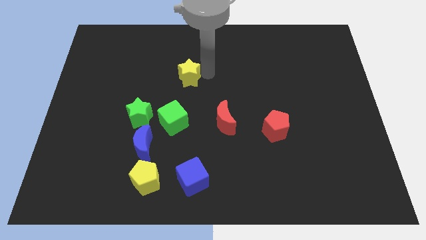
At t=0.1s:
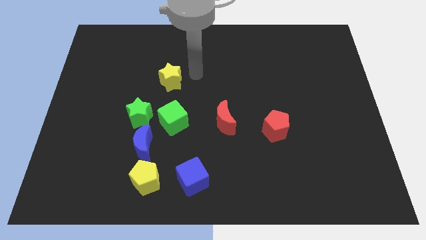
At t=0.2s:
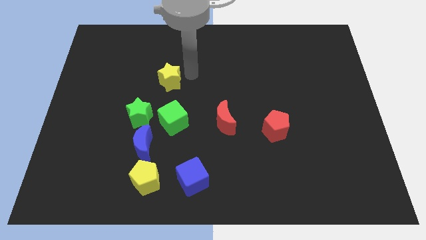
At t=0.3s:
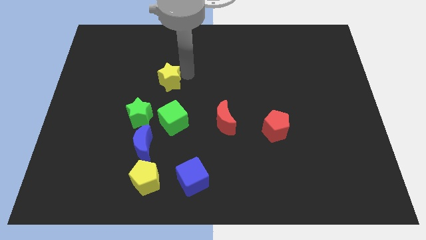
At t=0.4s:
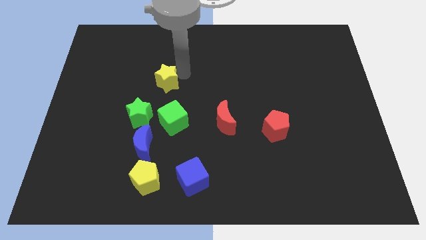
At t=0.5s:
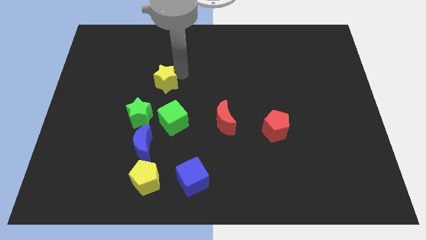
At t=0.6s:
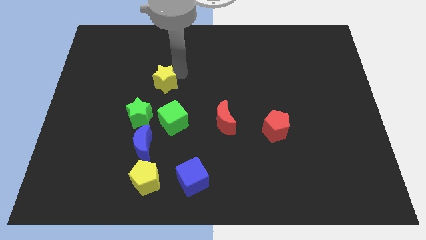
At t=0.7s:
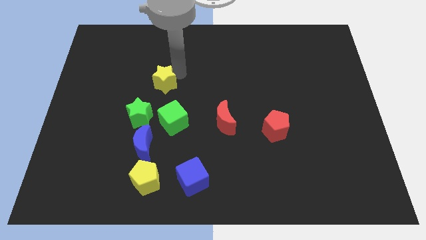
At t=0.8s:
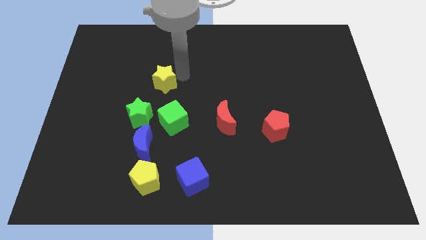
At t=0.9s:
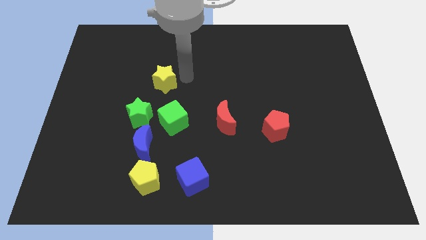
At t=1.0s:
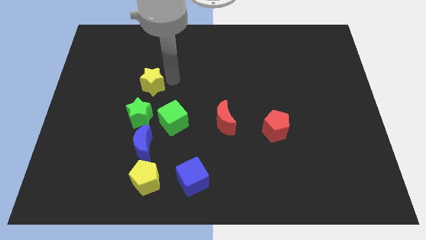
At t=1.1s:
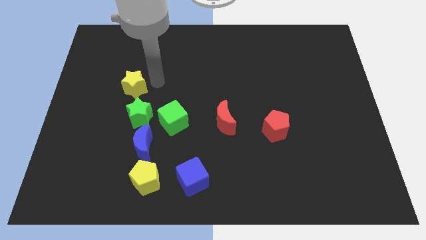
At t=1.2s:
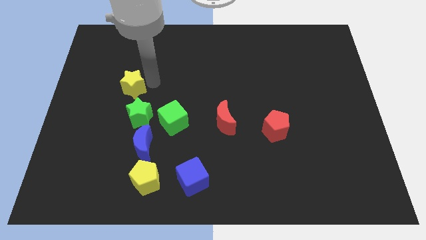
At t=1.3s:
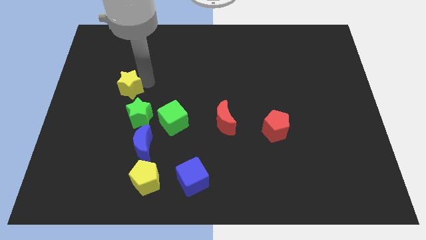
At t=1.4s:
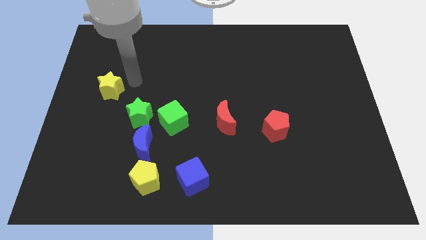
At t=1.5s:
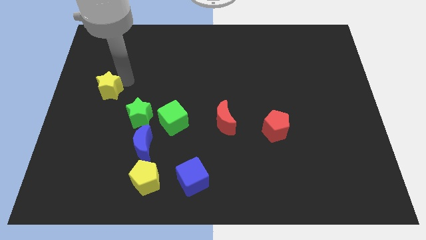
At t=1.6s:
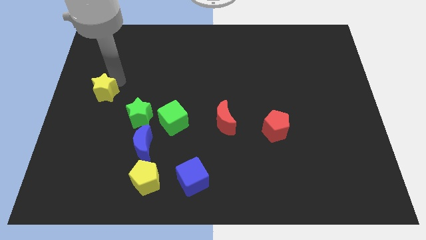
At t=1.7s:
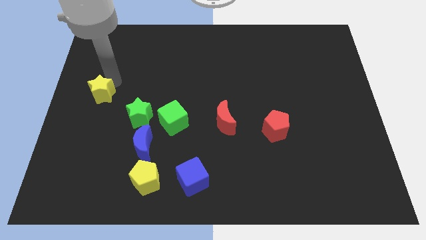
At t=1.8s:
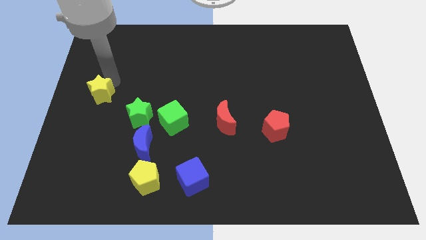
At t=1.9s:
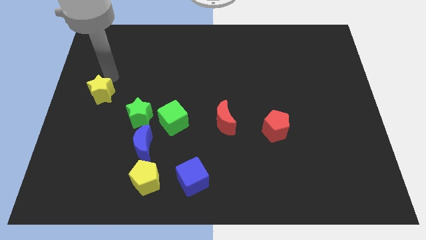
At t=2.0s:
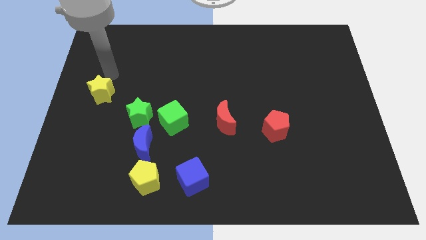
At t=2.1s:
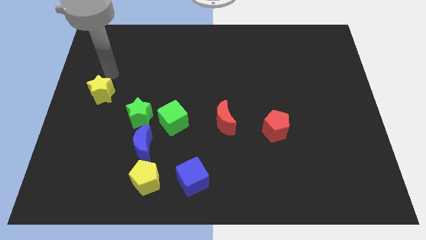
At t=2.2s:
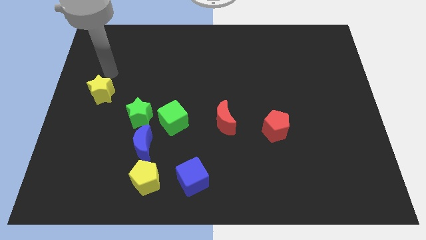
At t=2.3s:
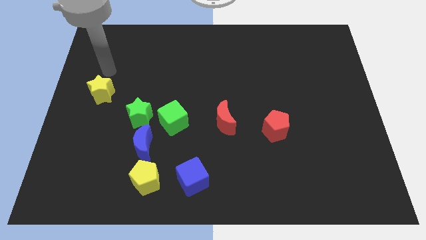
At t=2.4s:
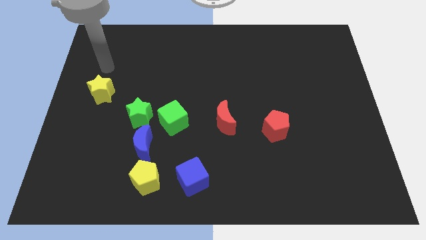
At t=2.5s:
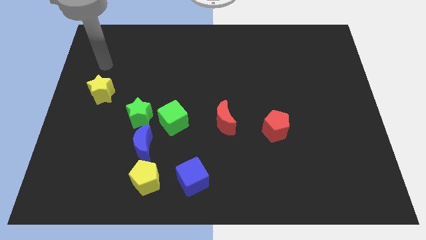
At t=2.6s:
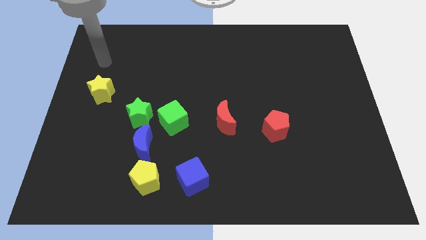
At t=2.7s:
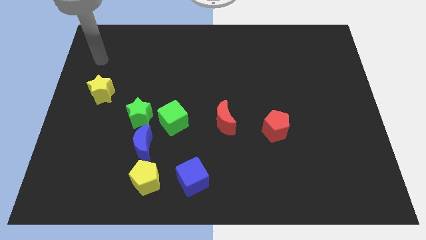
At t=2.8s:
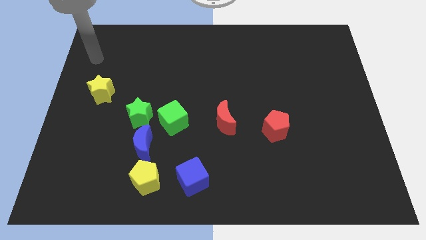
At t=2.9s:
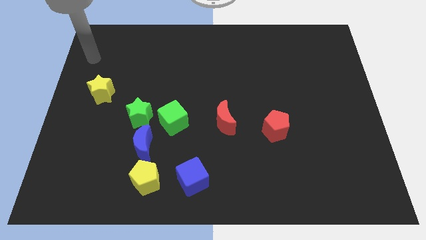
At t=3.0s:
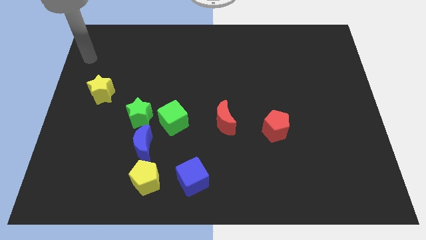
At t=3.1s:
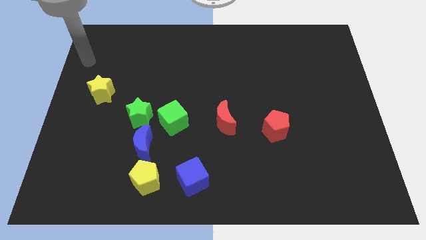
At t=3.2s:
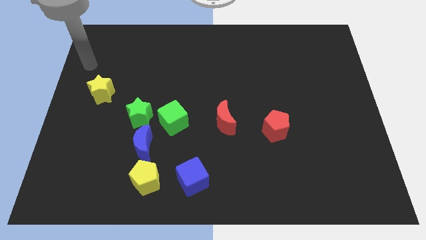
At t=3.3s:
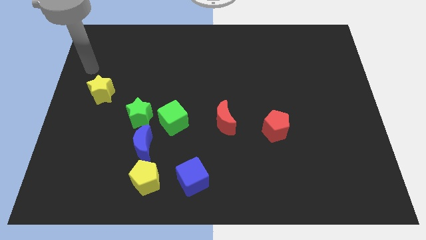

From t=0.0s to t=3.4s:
move yellow star to the left side of the board

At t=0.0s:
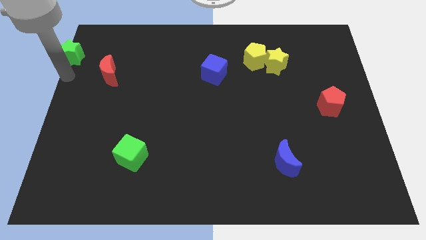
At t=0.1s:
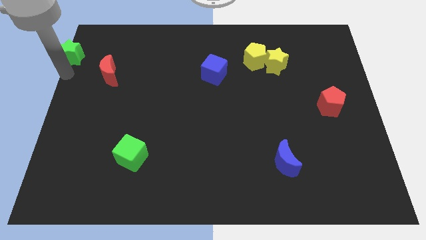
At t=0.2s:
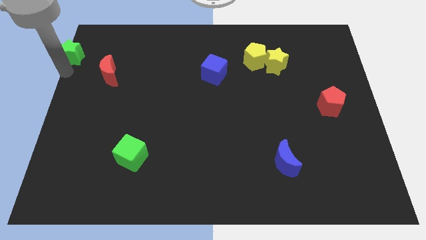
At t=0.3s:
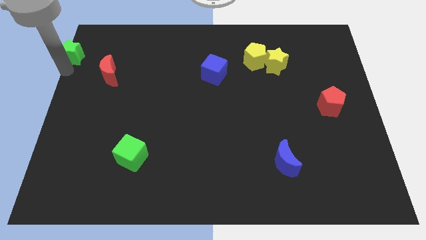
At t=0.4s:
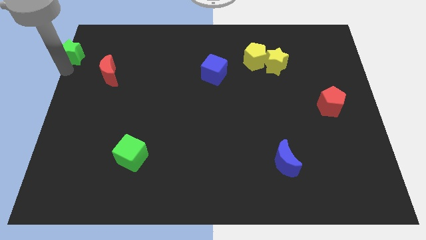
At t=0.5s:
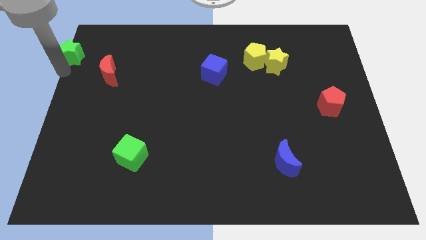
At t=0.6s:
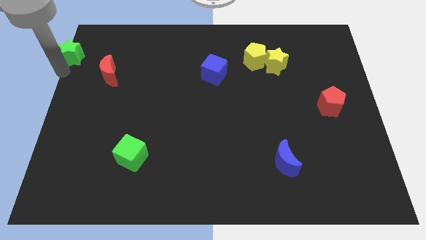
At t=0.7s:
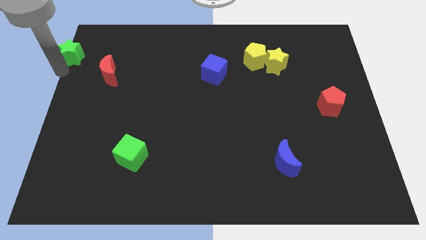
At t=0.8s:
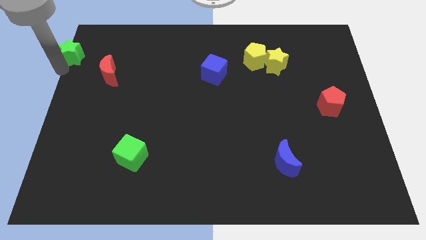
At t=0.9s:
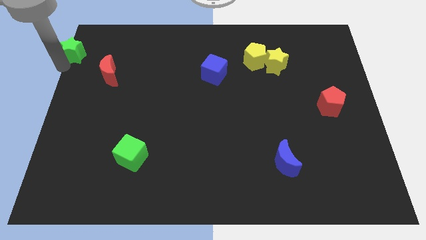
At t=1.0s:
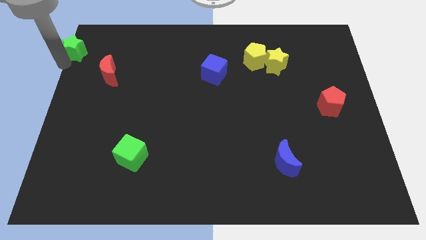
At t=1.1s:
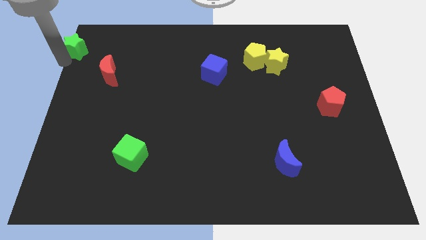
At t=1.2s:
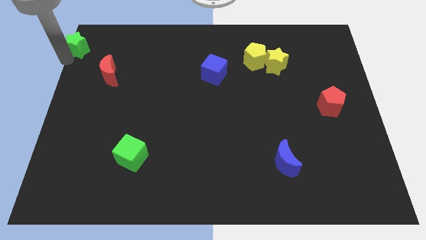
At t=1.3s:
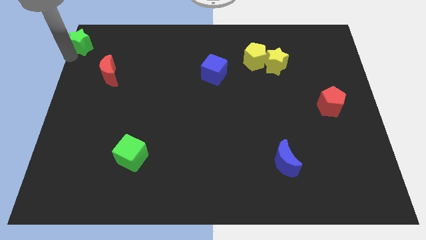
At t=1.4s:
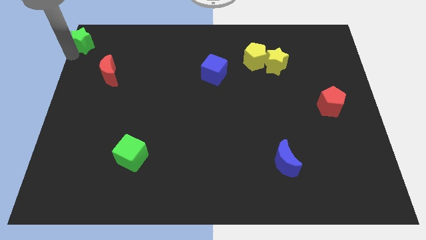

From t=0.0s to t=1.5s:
put the green star diagonally top left of the red moon

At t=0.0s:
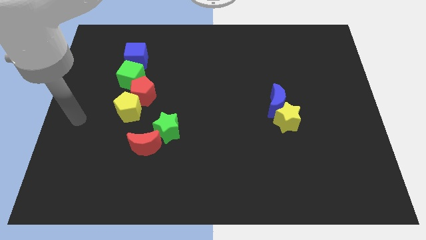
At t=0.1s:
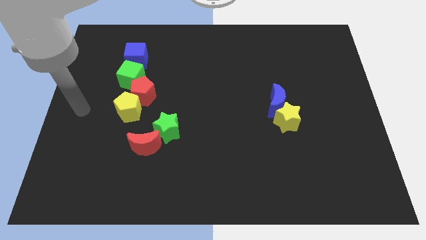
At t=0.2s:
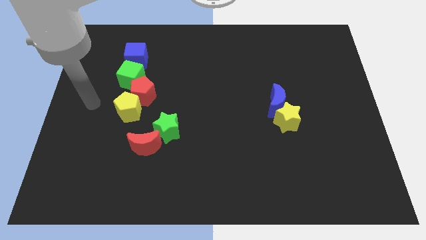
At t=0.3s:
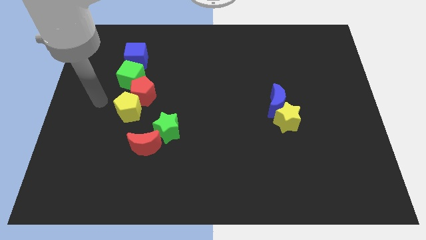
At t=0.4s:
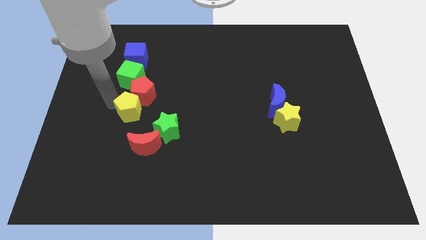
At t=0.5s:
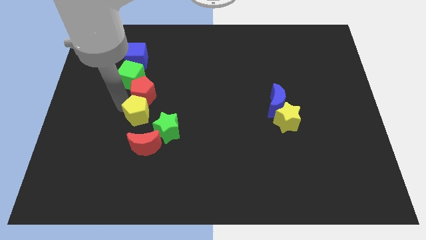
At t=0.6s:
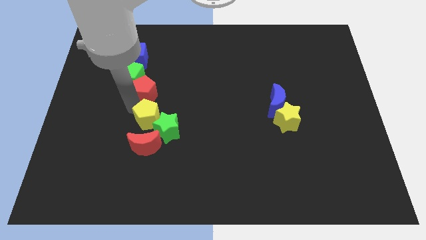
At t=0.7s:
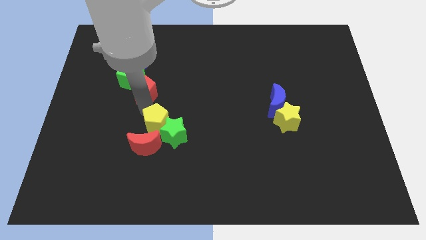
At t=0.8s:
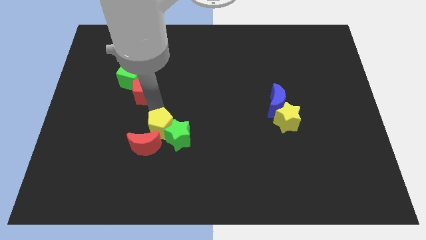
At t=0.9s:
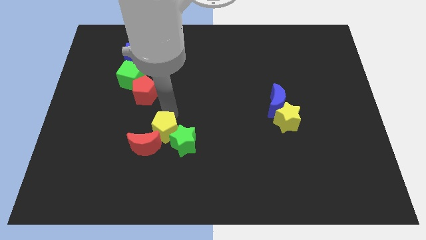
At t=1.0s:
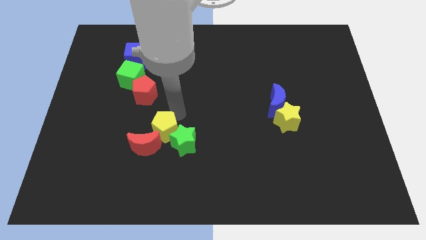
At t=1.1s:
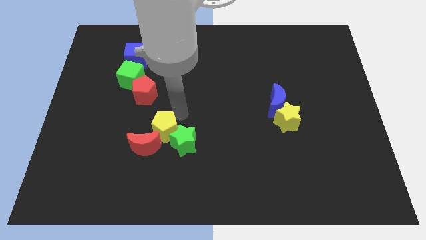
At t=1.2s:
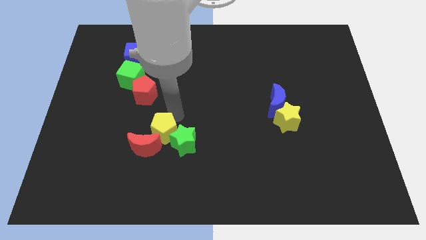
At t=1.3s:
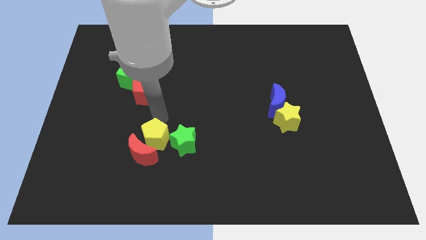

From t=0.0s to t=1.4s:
push the yellow pentagon and green star towards the bottom side

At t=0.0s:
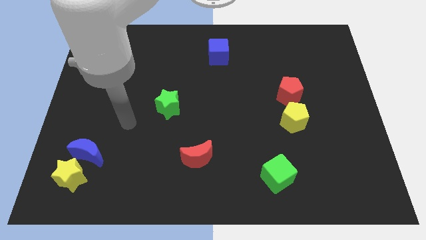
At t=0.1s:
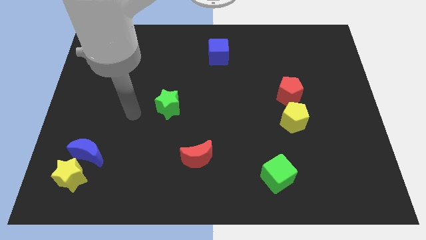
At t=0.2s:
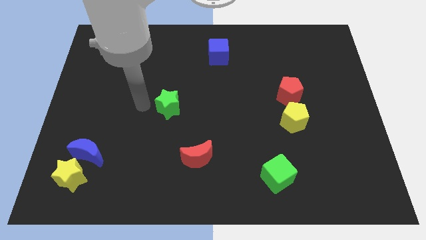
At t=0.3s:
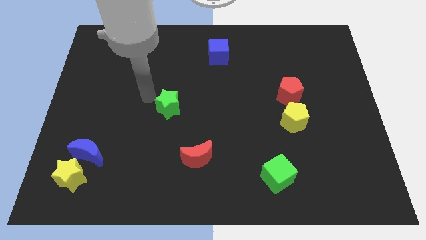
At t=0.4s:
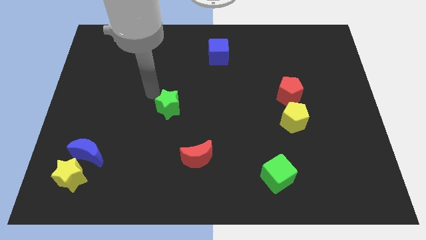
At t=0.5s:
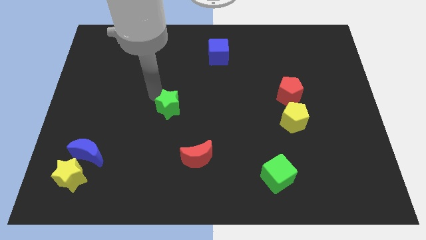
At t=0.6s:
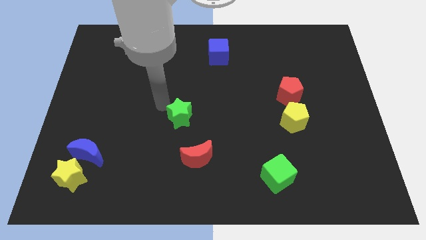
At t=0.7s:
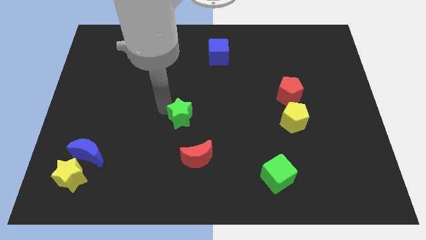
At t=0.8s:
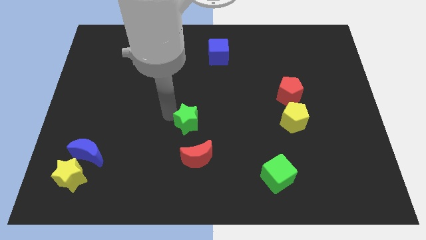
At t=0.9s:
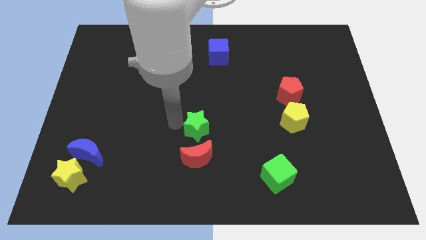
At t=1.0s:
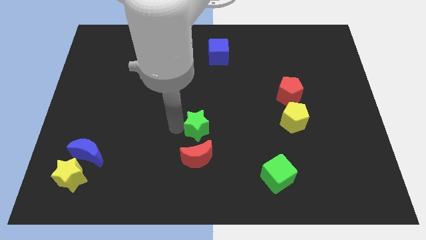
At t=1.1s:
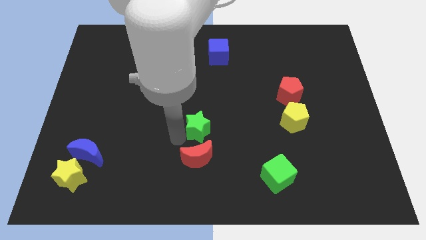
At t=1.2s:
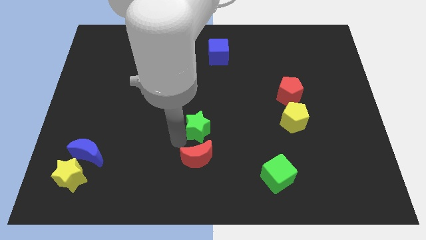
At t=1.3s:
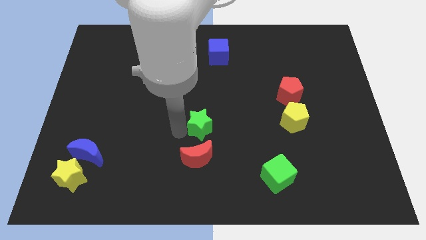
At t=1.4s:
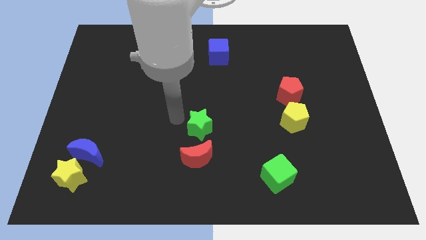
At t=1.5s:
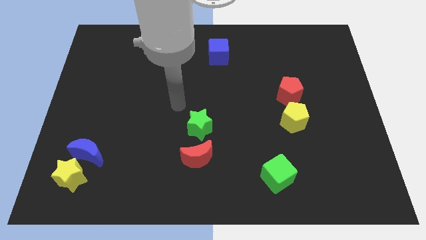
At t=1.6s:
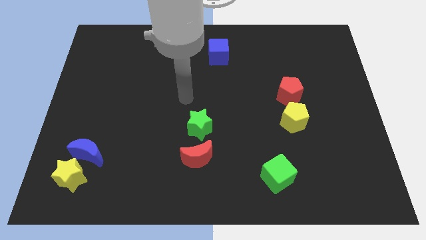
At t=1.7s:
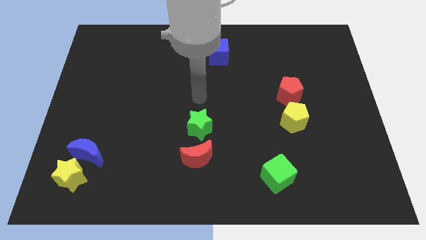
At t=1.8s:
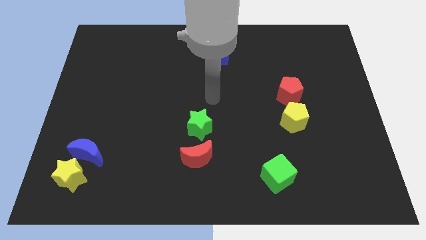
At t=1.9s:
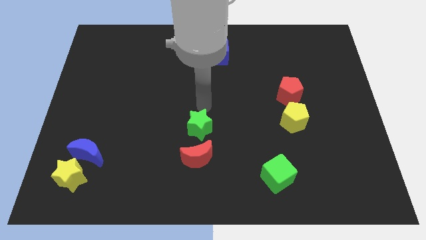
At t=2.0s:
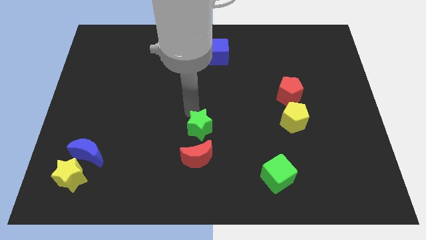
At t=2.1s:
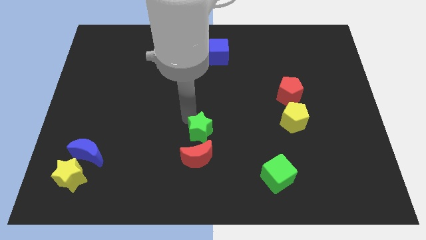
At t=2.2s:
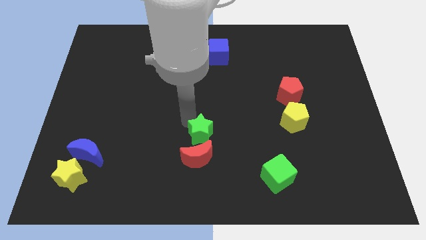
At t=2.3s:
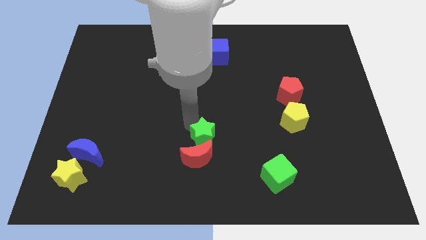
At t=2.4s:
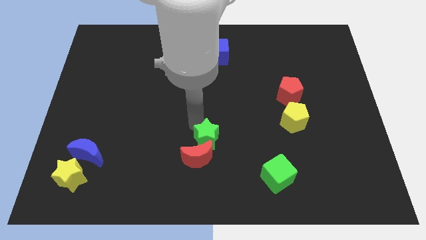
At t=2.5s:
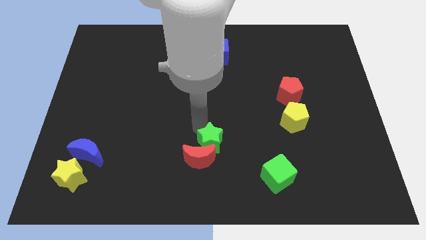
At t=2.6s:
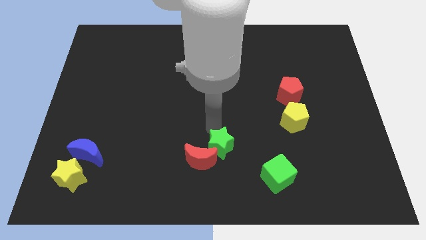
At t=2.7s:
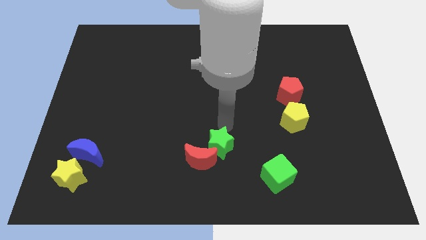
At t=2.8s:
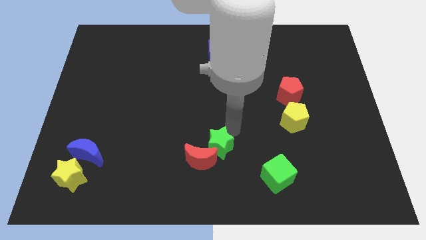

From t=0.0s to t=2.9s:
move green star right above the red moon
